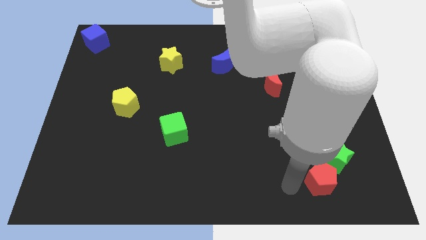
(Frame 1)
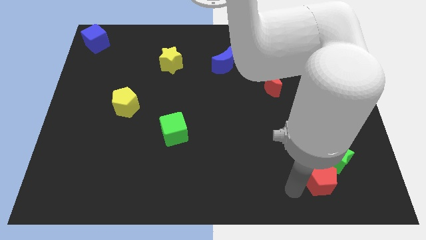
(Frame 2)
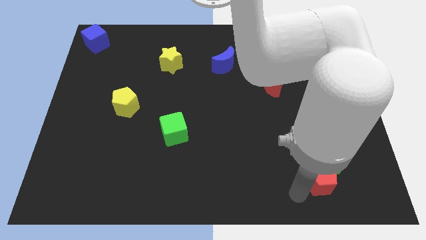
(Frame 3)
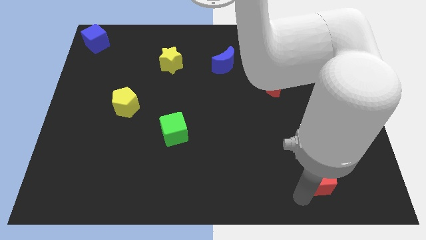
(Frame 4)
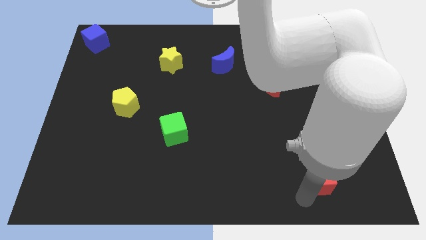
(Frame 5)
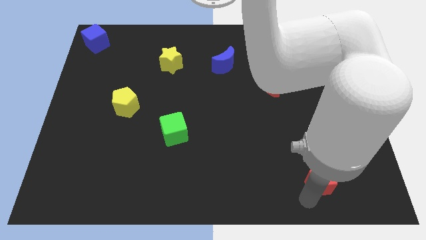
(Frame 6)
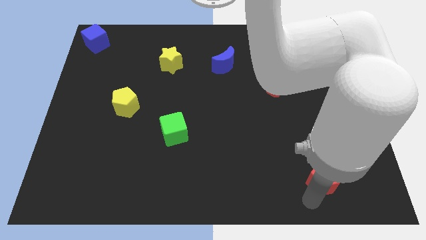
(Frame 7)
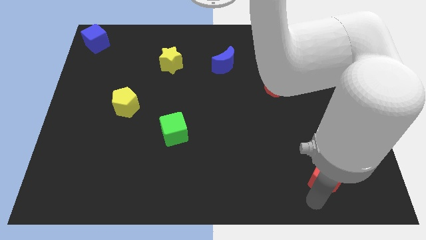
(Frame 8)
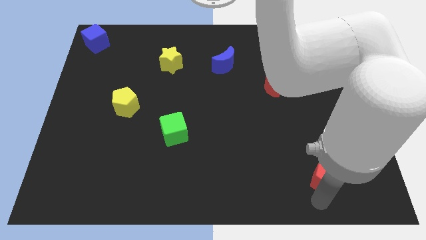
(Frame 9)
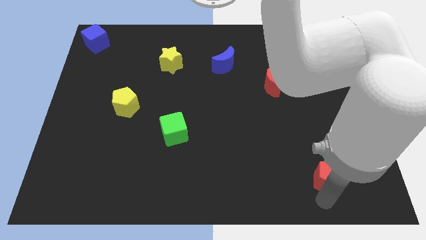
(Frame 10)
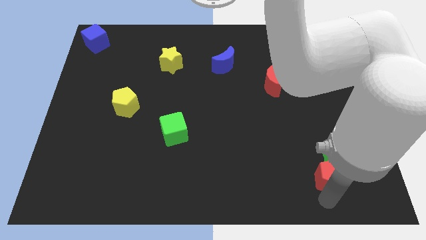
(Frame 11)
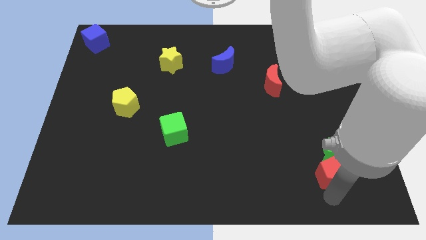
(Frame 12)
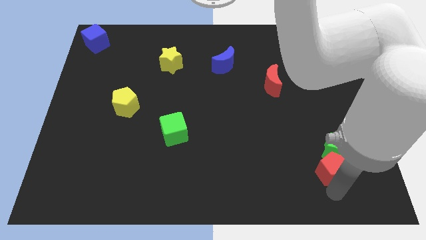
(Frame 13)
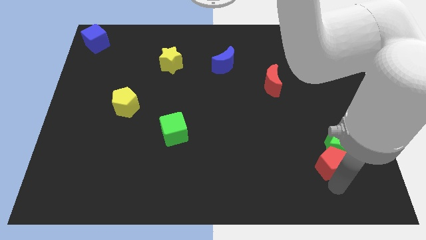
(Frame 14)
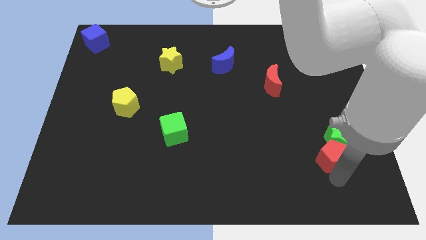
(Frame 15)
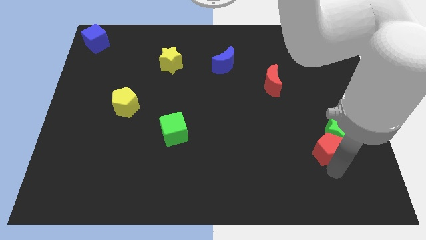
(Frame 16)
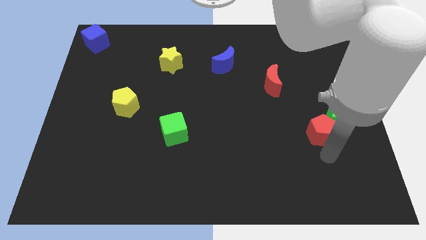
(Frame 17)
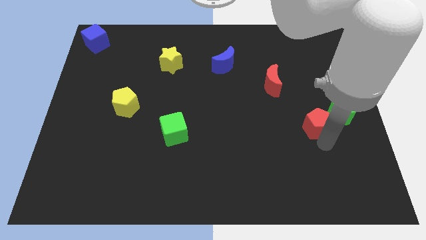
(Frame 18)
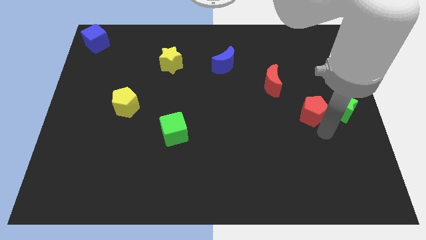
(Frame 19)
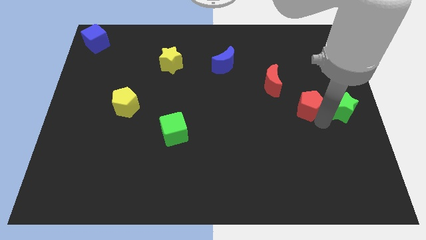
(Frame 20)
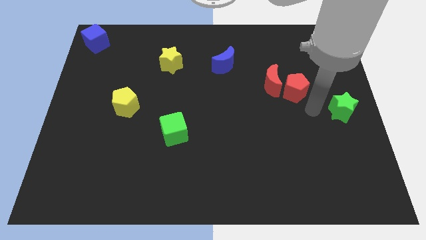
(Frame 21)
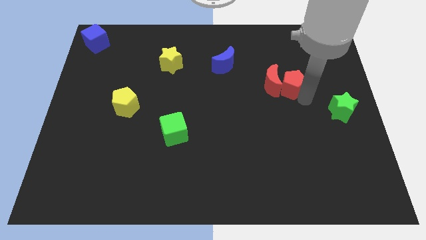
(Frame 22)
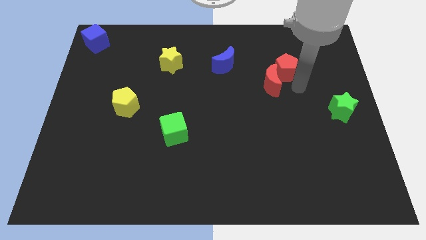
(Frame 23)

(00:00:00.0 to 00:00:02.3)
put the red pentagon right to the red moon

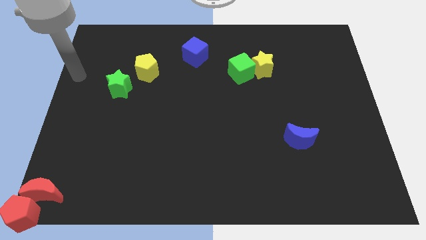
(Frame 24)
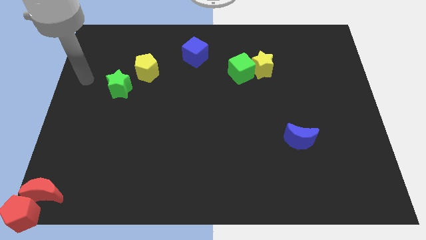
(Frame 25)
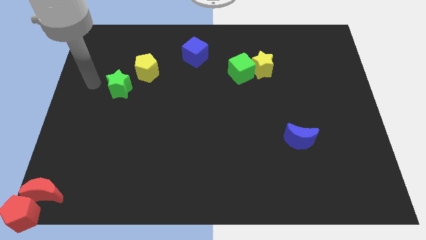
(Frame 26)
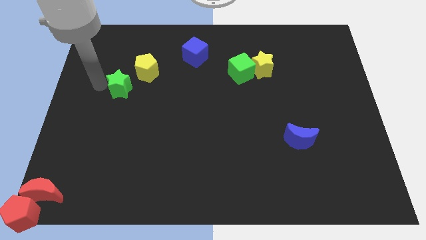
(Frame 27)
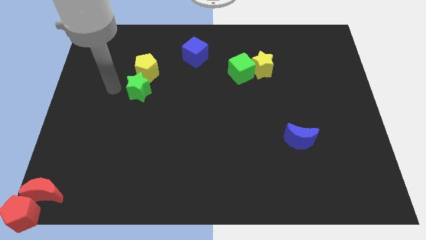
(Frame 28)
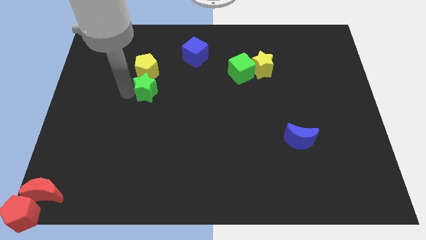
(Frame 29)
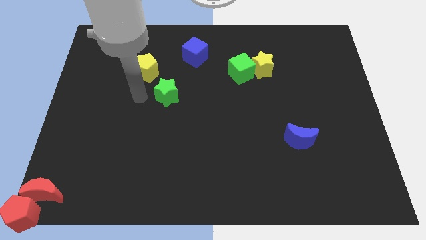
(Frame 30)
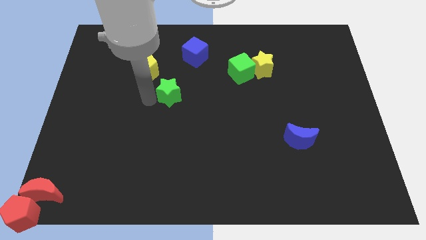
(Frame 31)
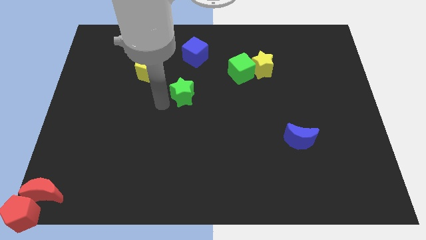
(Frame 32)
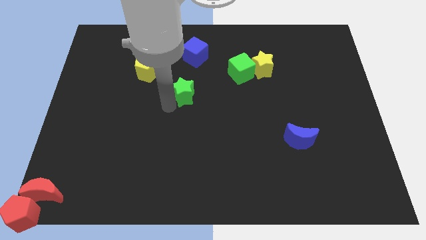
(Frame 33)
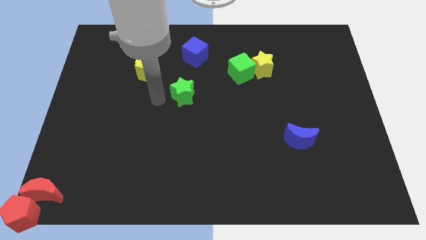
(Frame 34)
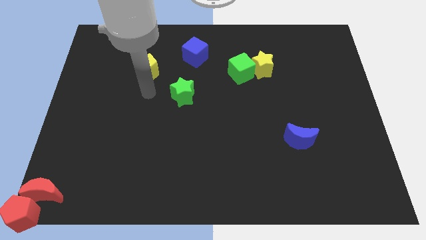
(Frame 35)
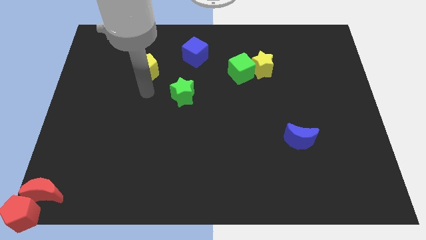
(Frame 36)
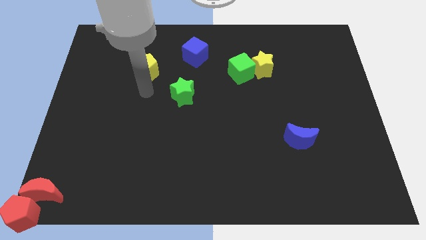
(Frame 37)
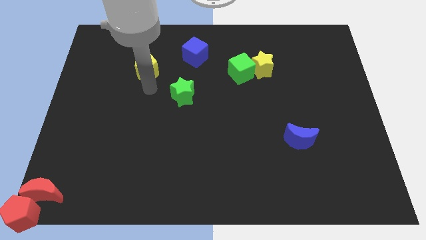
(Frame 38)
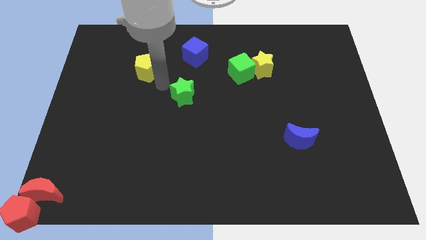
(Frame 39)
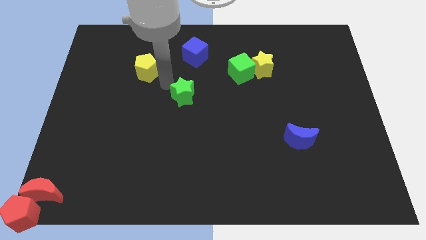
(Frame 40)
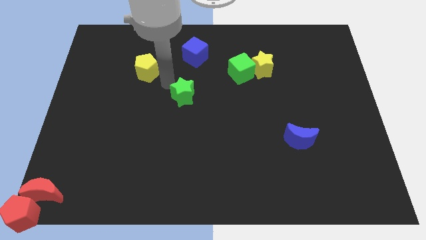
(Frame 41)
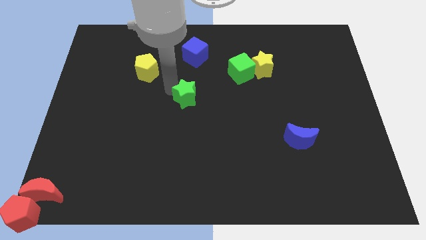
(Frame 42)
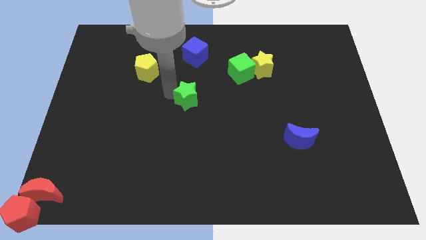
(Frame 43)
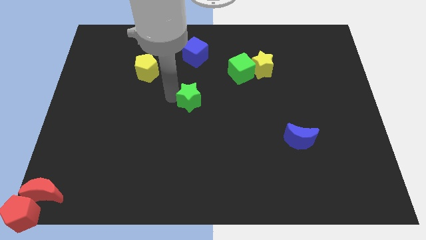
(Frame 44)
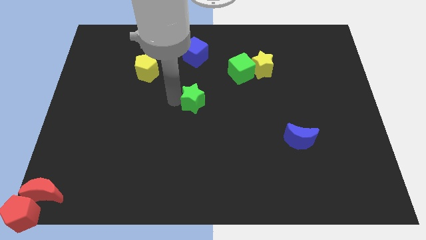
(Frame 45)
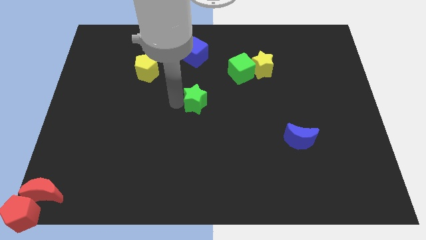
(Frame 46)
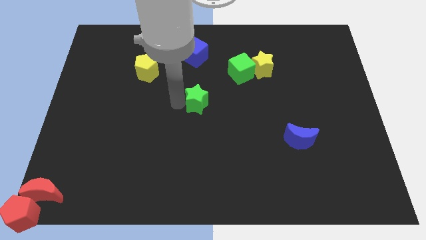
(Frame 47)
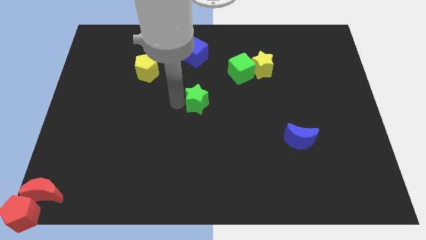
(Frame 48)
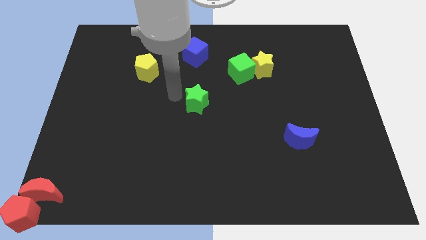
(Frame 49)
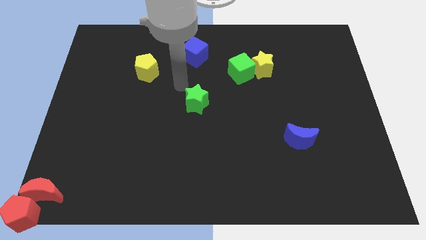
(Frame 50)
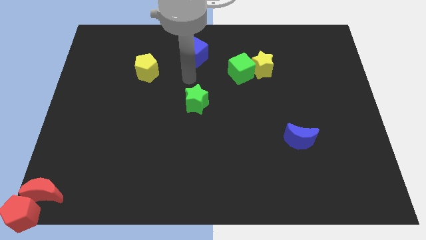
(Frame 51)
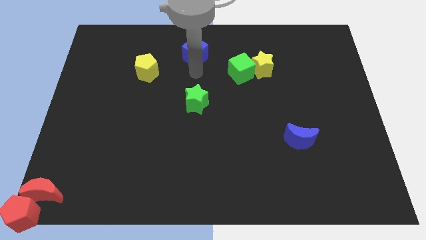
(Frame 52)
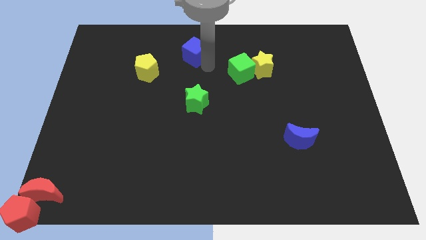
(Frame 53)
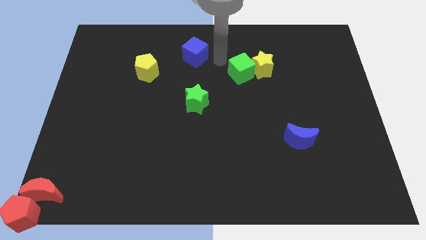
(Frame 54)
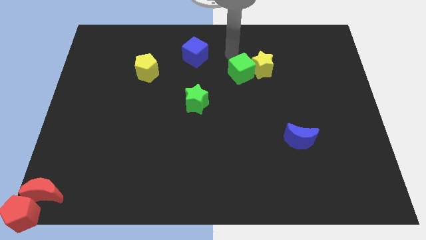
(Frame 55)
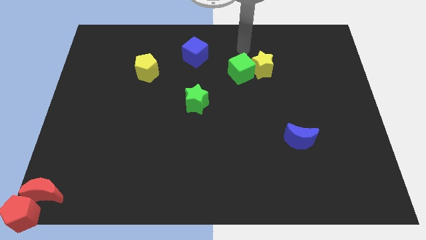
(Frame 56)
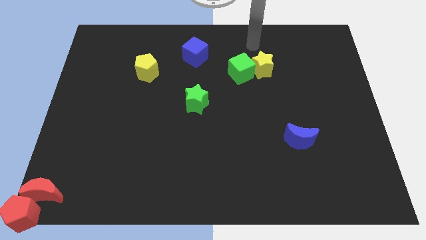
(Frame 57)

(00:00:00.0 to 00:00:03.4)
push the green star below the blue cube

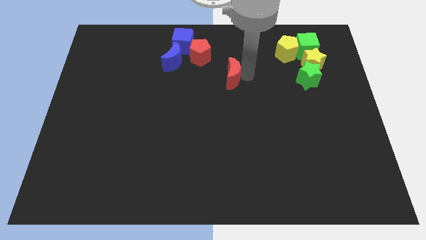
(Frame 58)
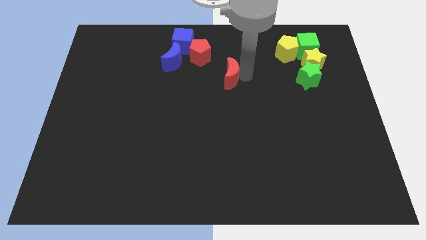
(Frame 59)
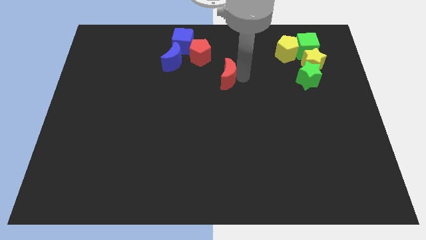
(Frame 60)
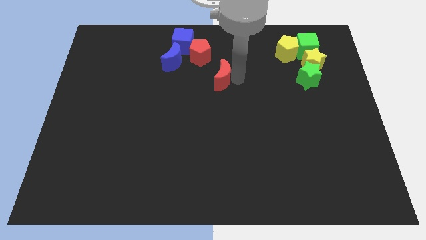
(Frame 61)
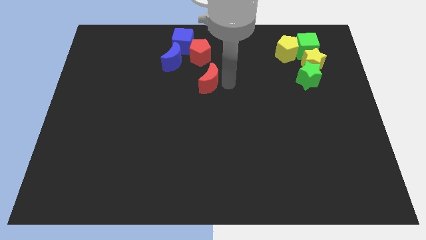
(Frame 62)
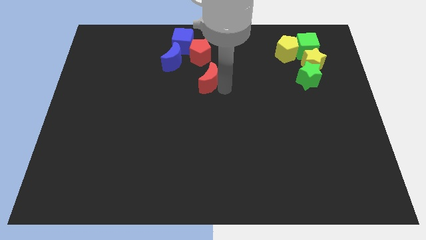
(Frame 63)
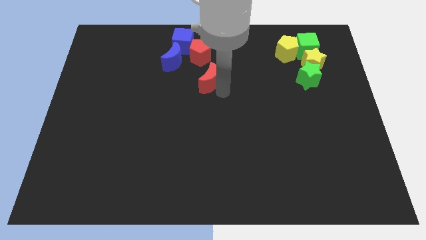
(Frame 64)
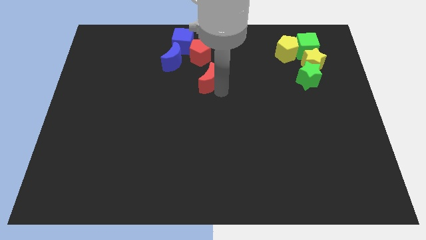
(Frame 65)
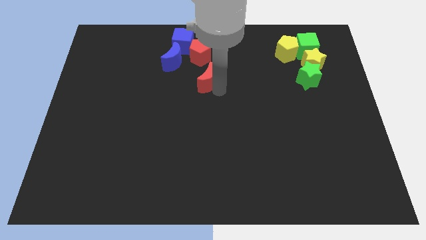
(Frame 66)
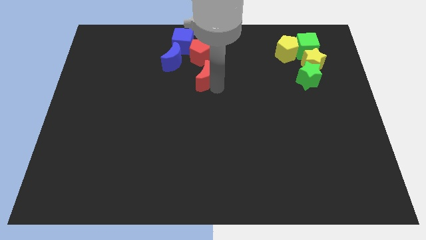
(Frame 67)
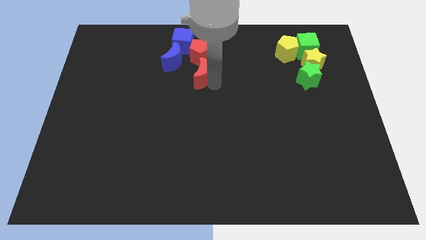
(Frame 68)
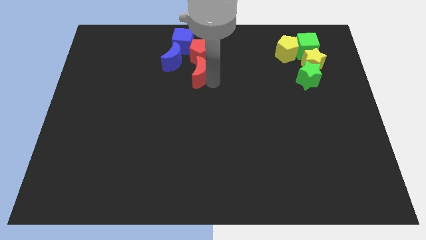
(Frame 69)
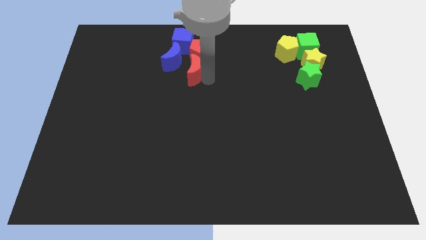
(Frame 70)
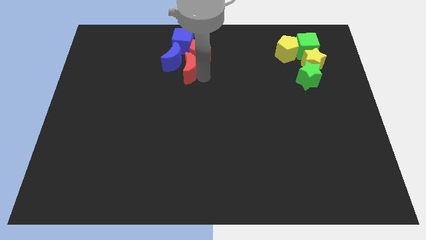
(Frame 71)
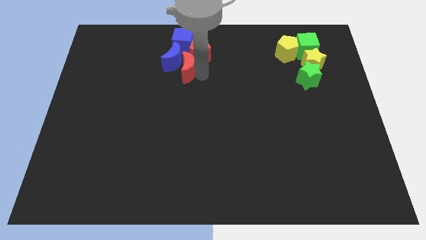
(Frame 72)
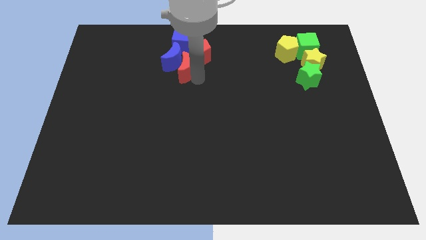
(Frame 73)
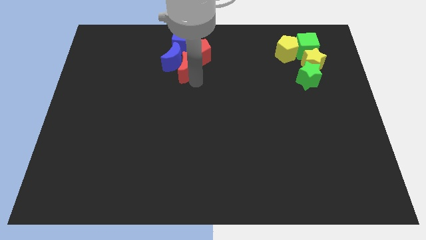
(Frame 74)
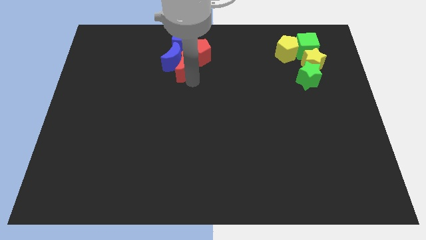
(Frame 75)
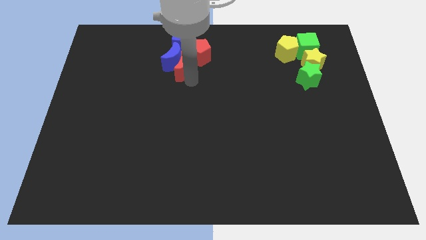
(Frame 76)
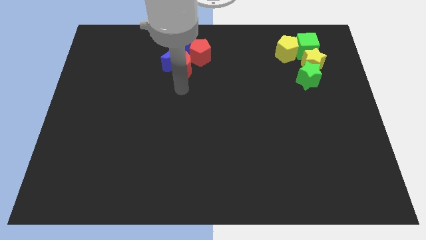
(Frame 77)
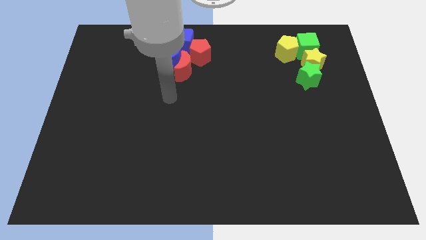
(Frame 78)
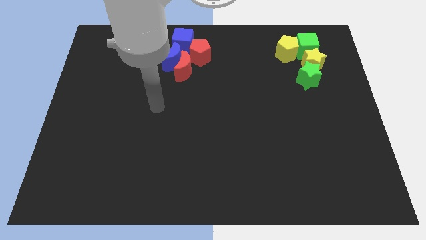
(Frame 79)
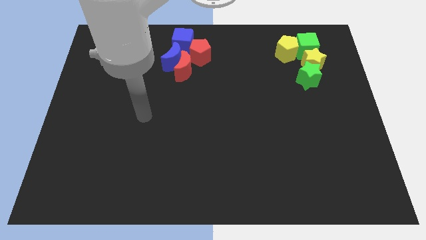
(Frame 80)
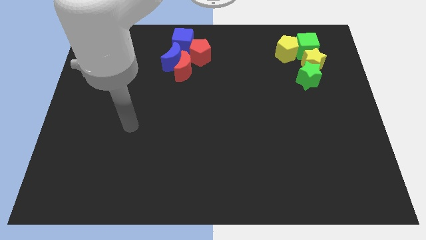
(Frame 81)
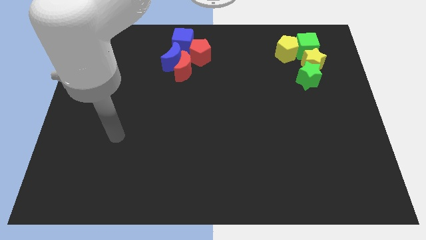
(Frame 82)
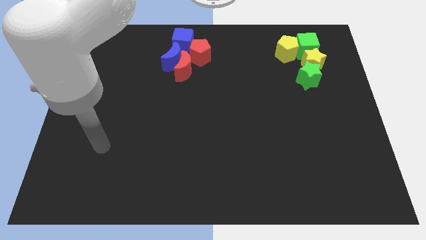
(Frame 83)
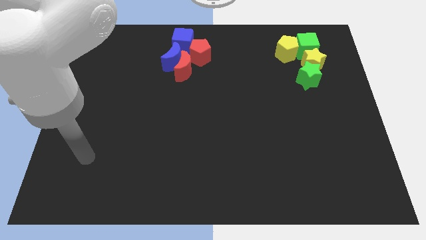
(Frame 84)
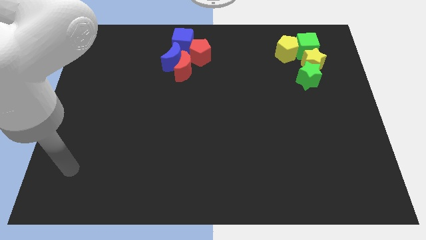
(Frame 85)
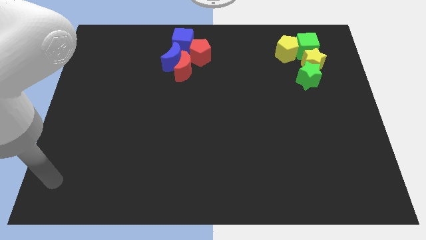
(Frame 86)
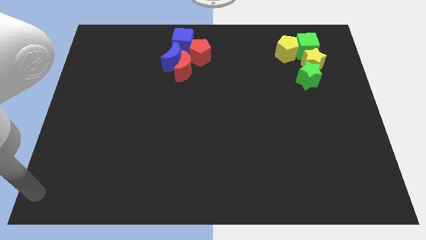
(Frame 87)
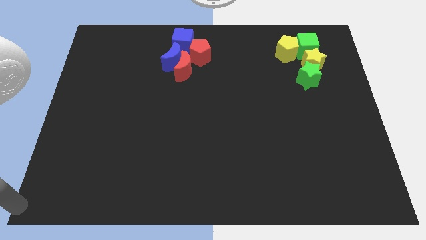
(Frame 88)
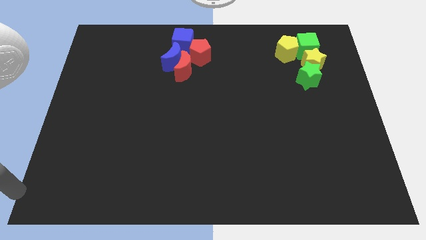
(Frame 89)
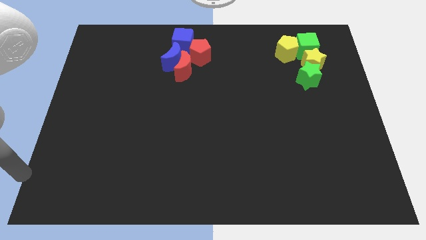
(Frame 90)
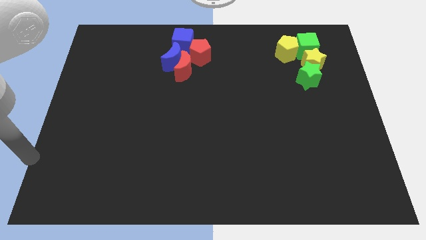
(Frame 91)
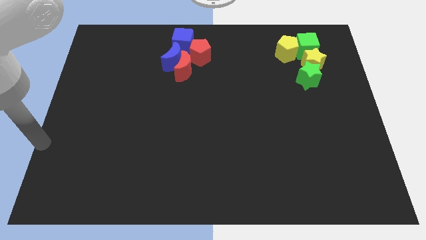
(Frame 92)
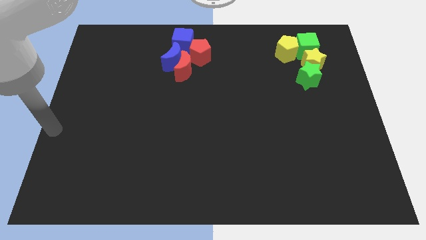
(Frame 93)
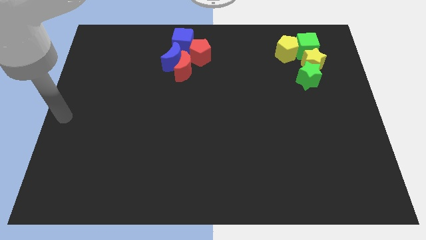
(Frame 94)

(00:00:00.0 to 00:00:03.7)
move the red moon below the blue moon
